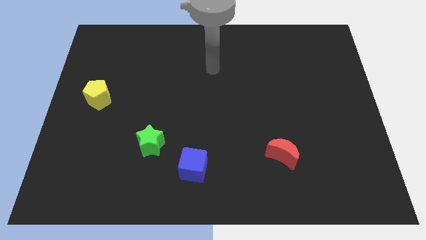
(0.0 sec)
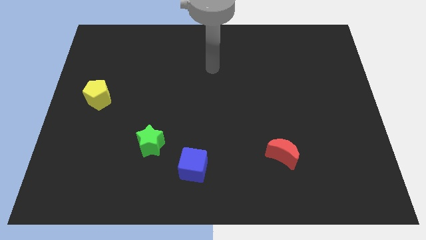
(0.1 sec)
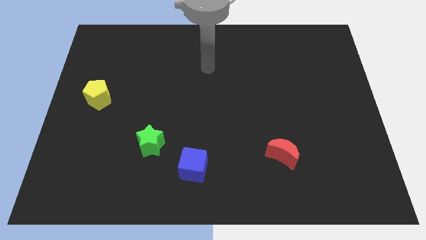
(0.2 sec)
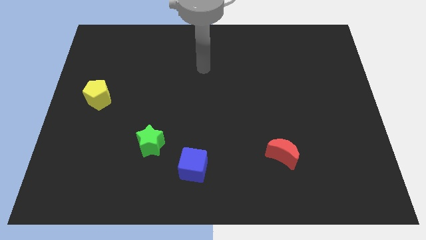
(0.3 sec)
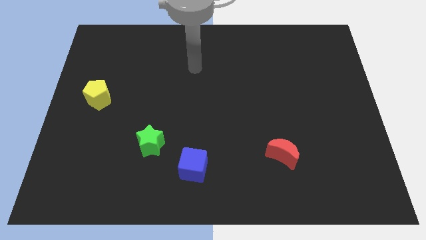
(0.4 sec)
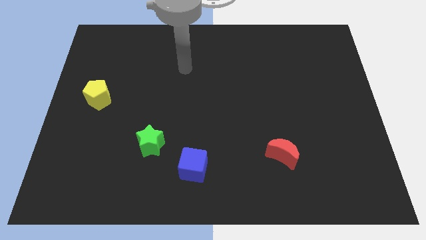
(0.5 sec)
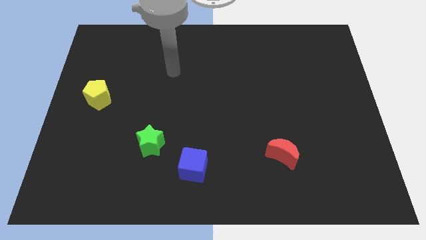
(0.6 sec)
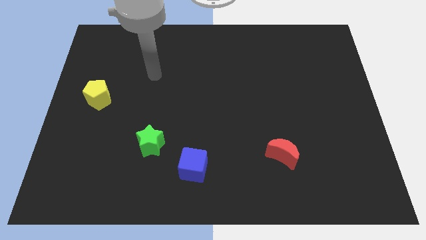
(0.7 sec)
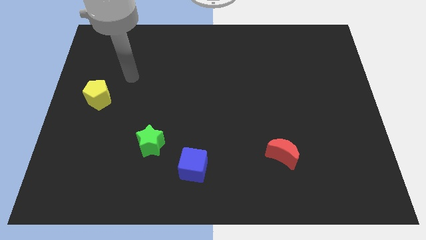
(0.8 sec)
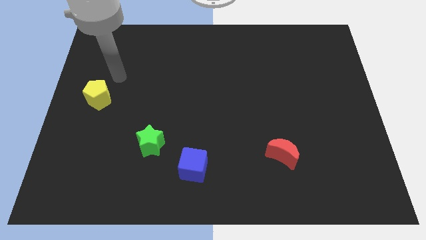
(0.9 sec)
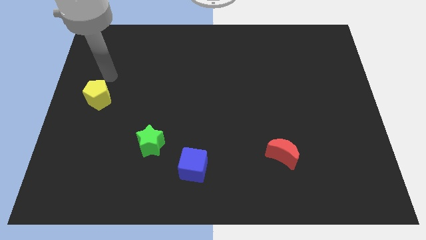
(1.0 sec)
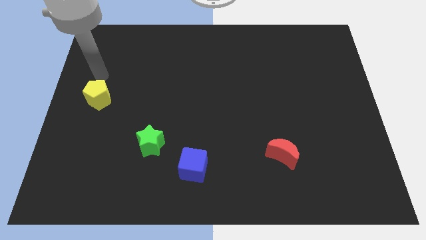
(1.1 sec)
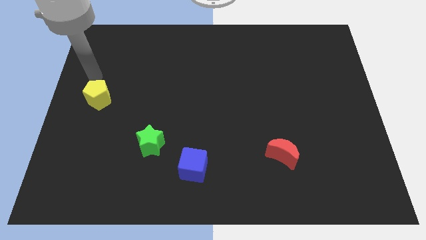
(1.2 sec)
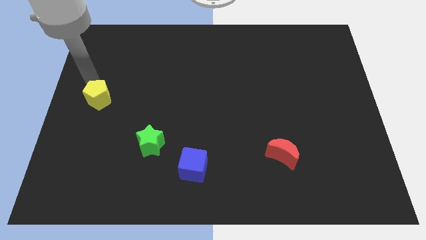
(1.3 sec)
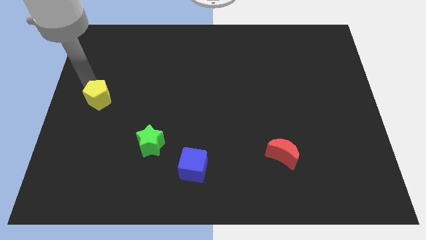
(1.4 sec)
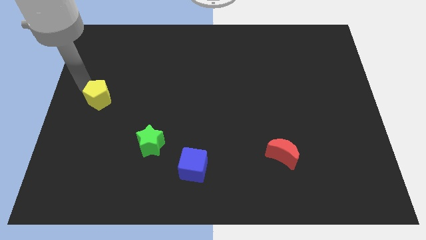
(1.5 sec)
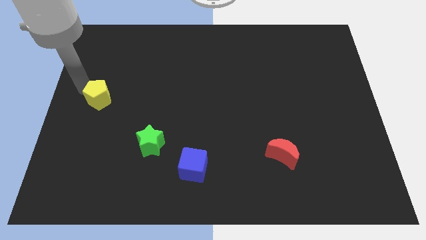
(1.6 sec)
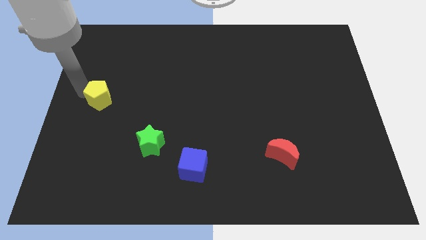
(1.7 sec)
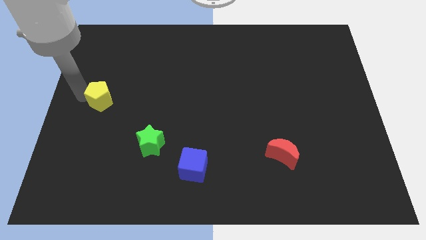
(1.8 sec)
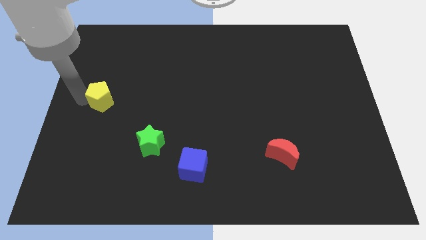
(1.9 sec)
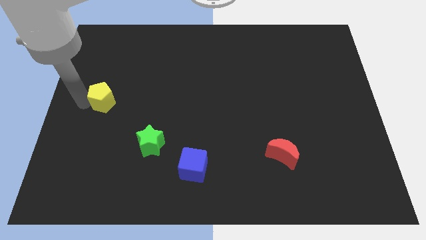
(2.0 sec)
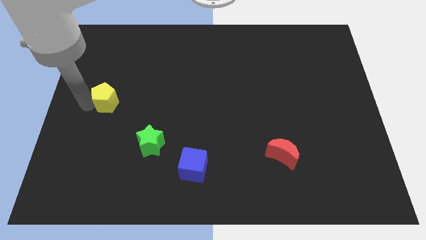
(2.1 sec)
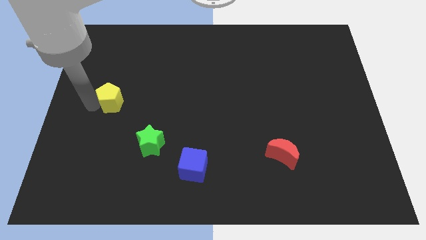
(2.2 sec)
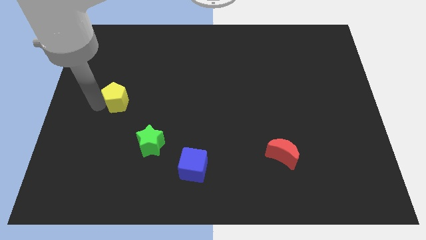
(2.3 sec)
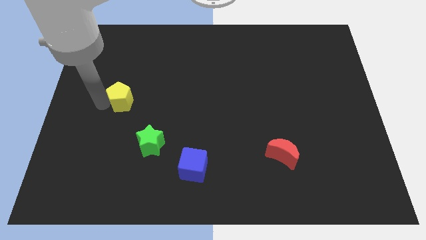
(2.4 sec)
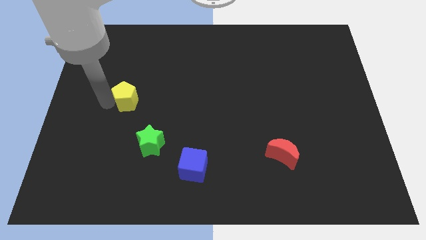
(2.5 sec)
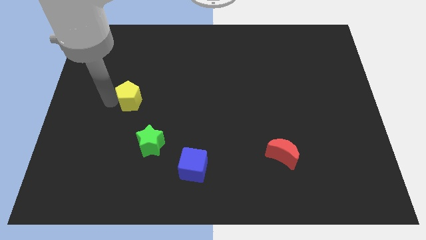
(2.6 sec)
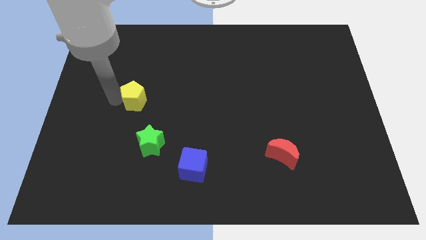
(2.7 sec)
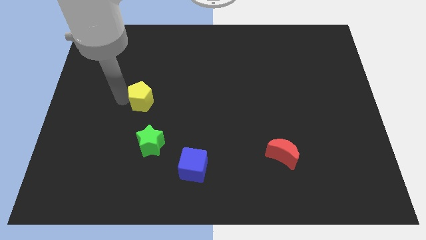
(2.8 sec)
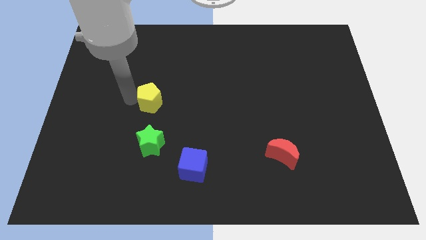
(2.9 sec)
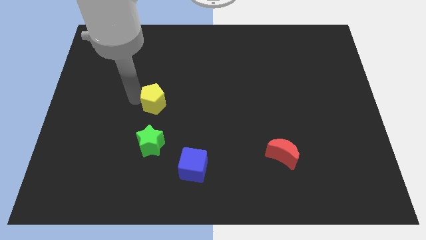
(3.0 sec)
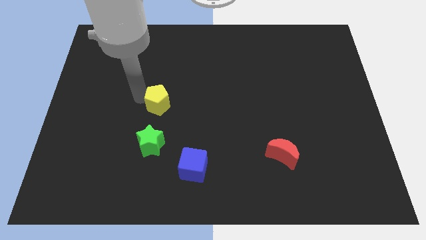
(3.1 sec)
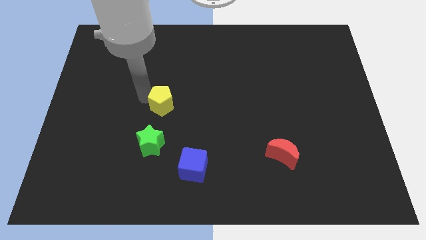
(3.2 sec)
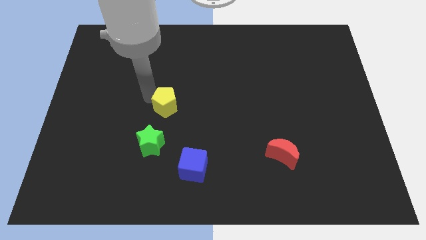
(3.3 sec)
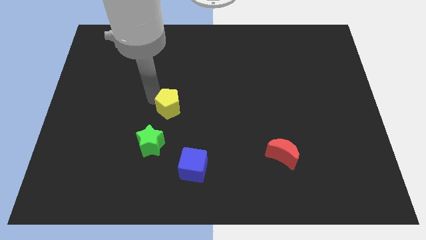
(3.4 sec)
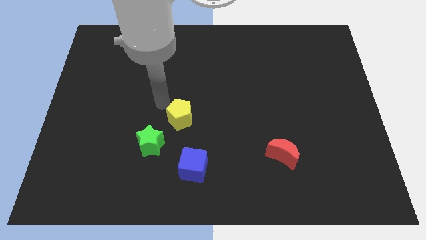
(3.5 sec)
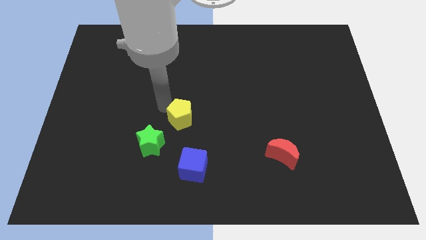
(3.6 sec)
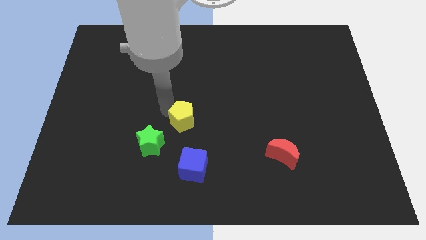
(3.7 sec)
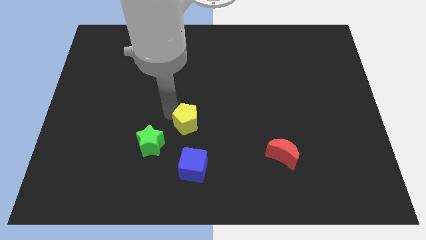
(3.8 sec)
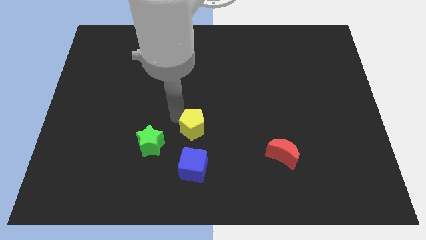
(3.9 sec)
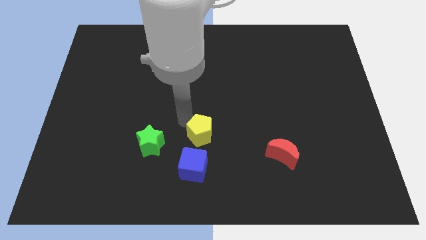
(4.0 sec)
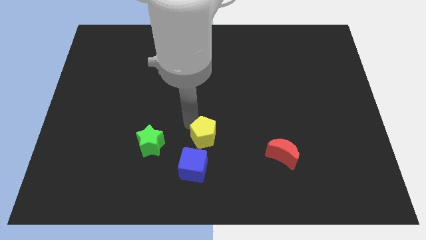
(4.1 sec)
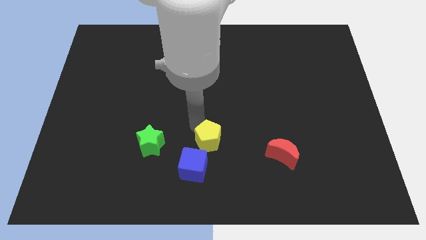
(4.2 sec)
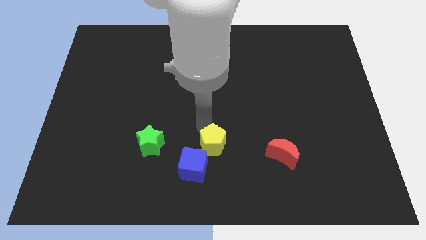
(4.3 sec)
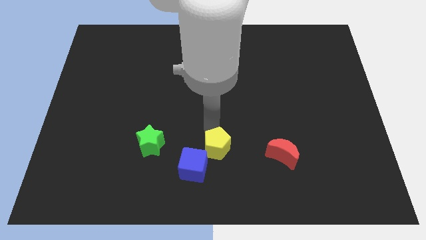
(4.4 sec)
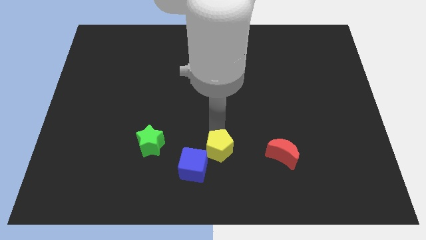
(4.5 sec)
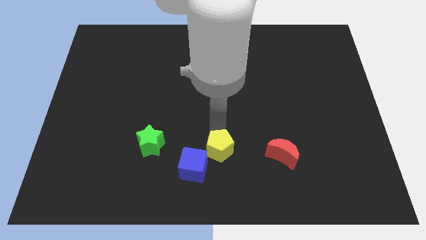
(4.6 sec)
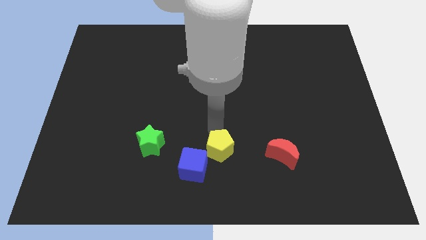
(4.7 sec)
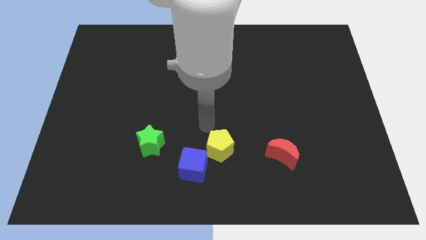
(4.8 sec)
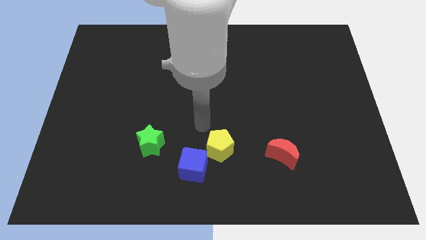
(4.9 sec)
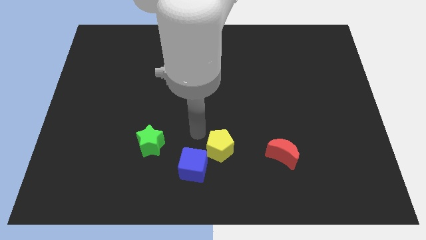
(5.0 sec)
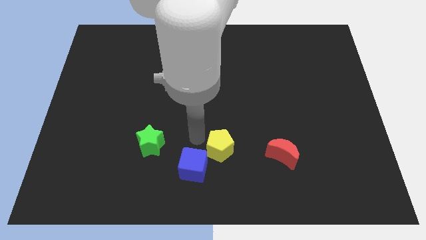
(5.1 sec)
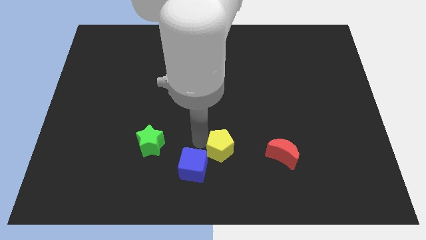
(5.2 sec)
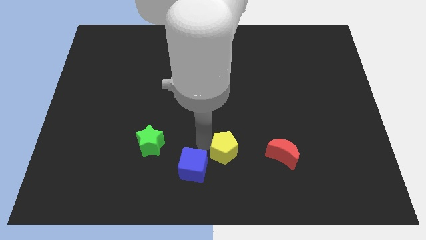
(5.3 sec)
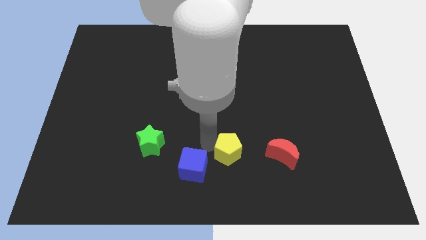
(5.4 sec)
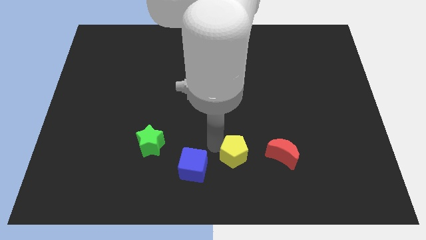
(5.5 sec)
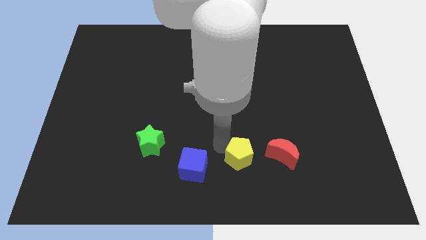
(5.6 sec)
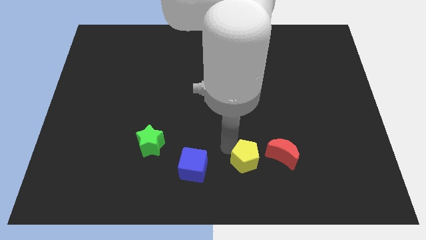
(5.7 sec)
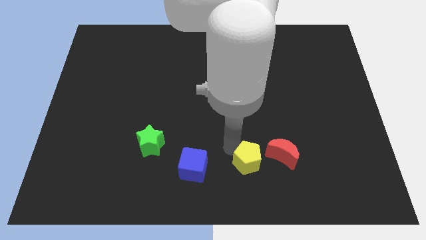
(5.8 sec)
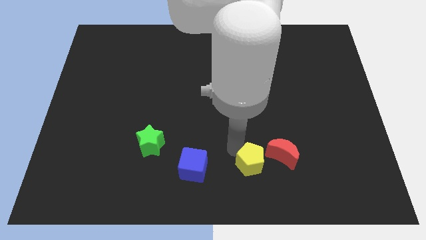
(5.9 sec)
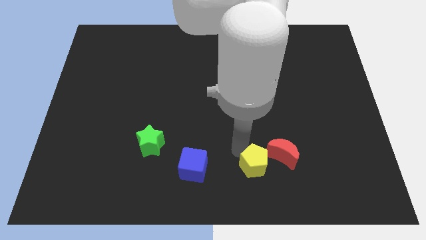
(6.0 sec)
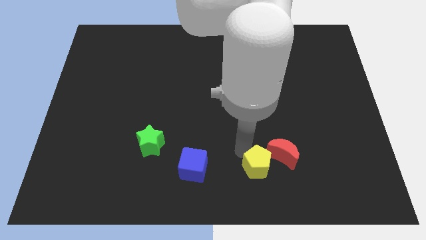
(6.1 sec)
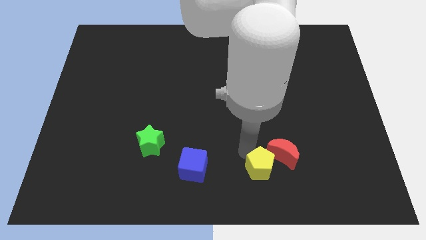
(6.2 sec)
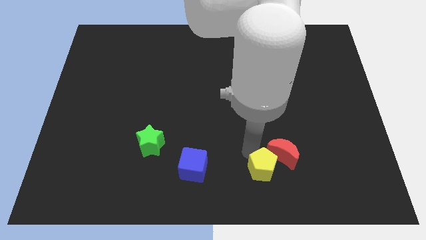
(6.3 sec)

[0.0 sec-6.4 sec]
push the yellow pentagon close to the moon

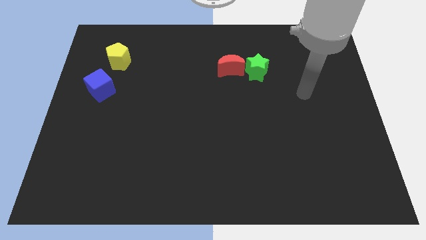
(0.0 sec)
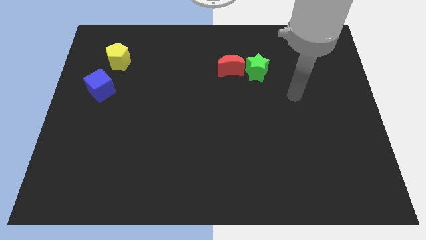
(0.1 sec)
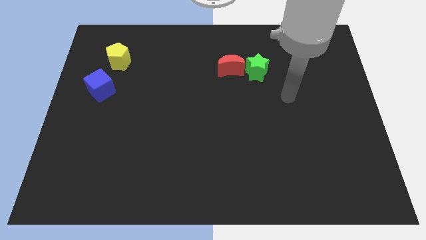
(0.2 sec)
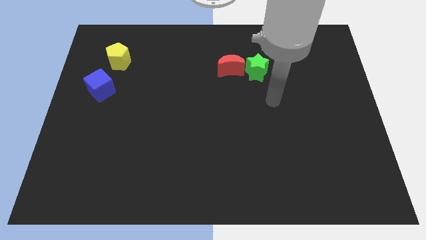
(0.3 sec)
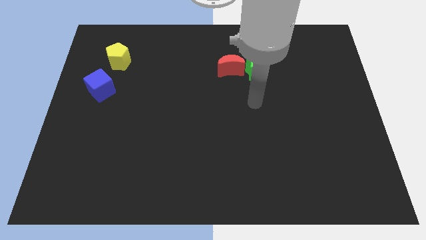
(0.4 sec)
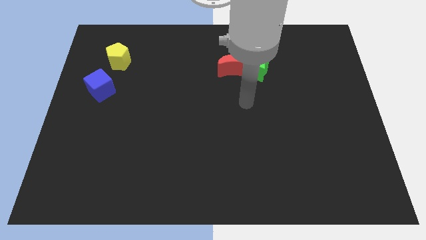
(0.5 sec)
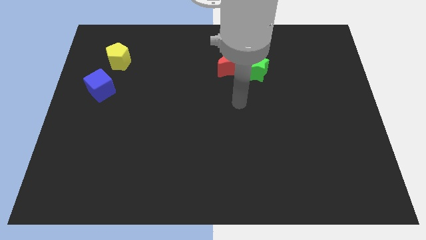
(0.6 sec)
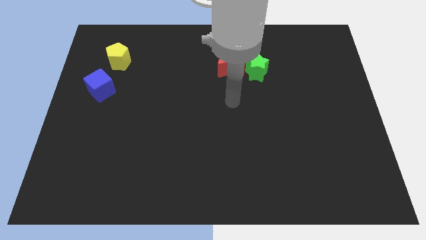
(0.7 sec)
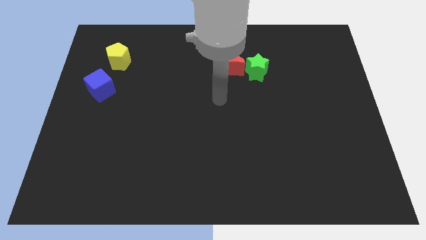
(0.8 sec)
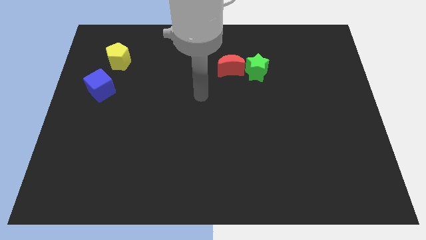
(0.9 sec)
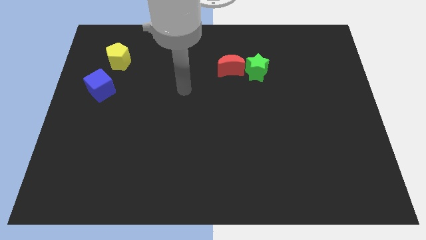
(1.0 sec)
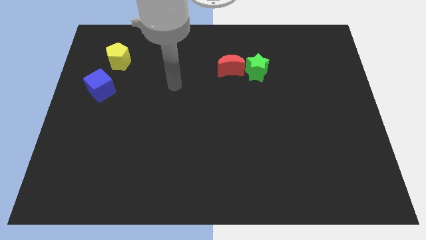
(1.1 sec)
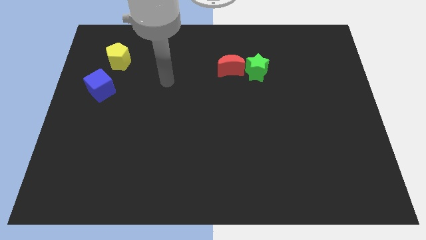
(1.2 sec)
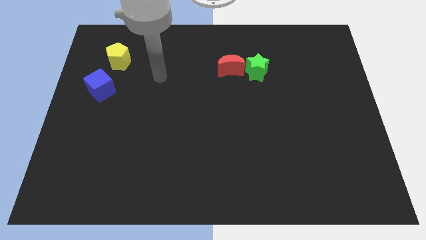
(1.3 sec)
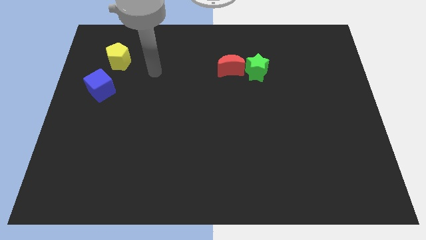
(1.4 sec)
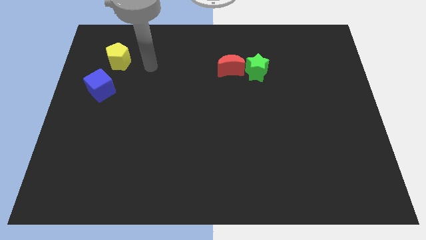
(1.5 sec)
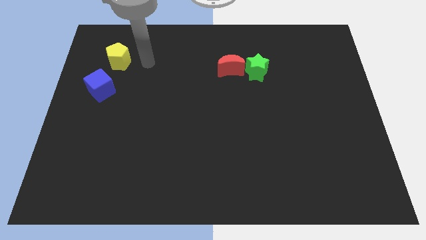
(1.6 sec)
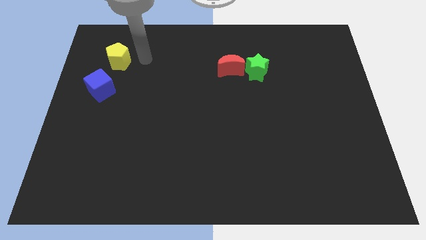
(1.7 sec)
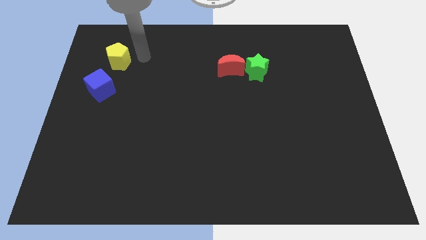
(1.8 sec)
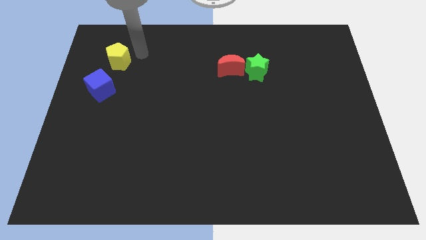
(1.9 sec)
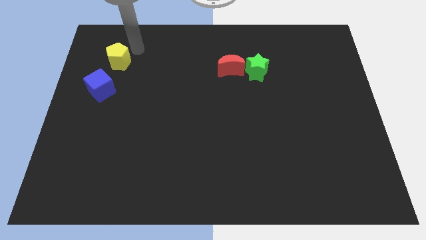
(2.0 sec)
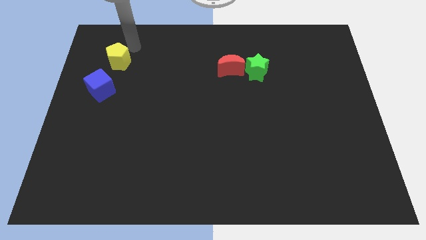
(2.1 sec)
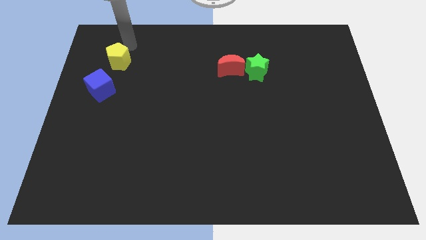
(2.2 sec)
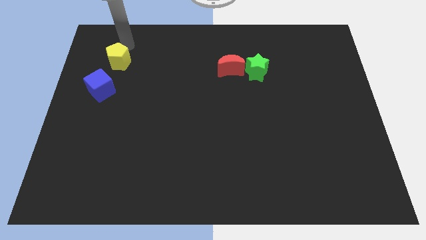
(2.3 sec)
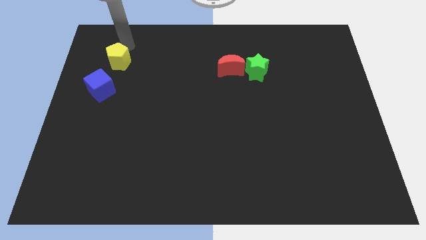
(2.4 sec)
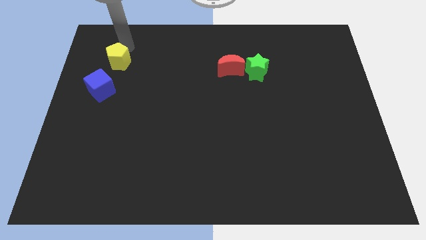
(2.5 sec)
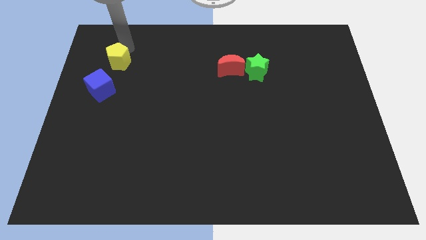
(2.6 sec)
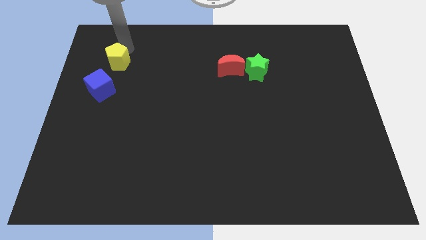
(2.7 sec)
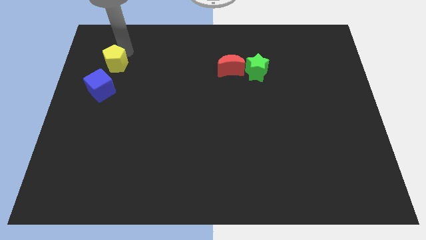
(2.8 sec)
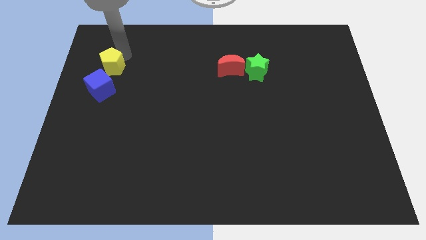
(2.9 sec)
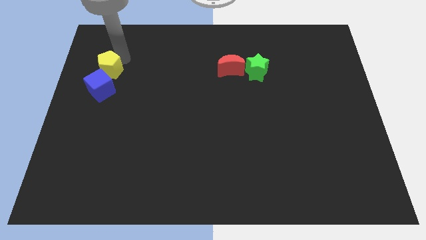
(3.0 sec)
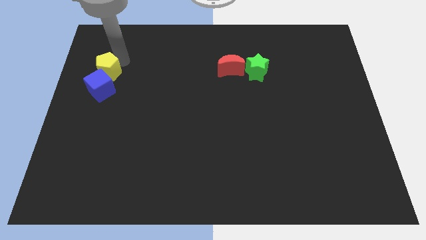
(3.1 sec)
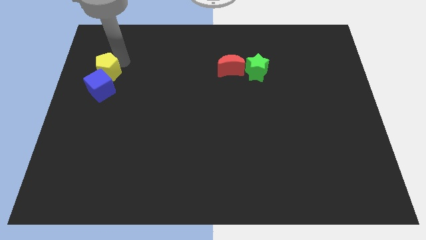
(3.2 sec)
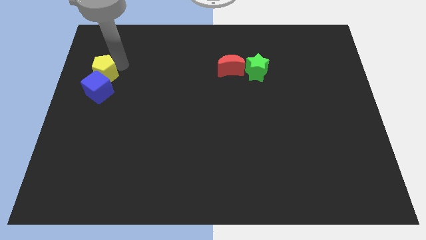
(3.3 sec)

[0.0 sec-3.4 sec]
move the yellow block to the cube
